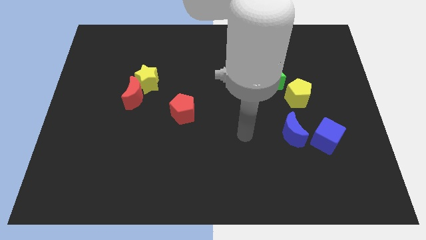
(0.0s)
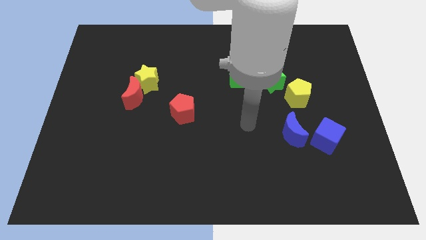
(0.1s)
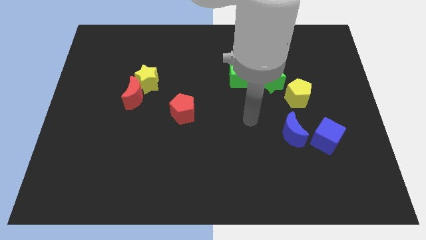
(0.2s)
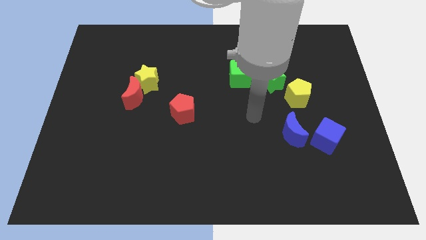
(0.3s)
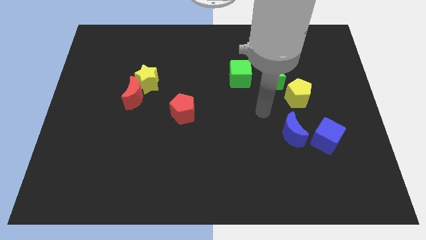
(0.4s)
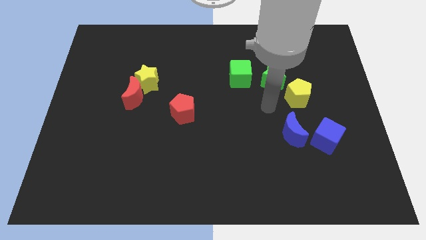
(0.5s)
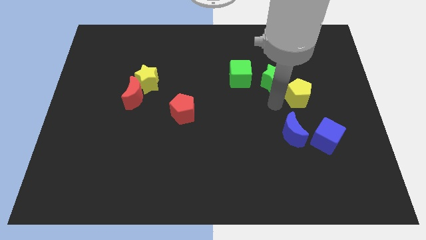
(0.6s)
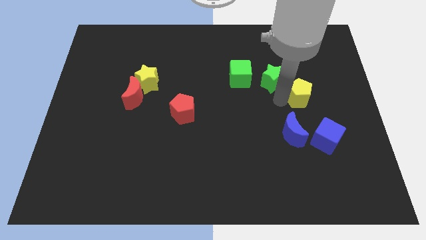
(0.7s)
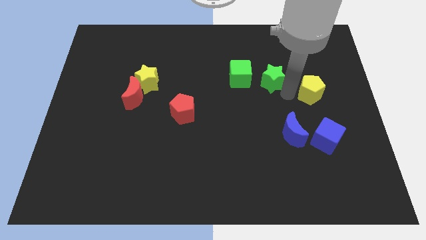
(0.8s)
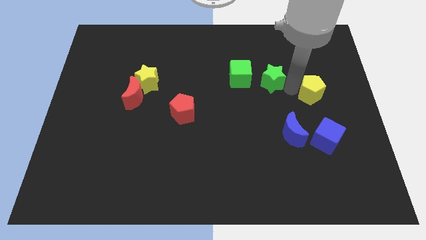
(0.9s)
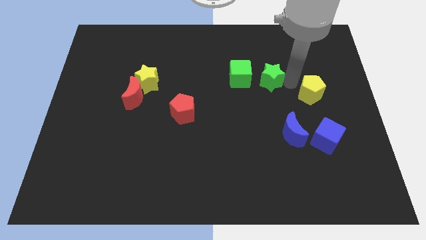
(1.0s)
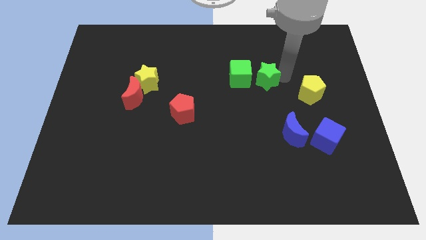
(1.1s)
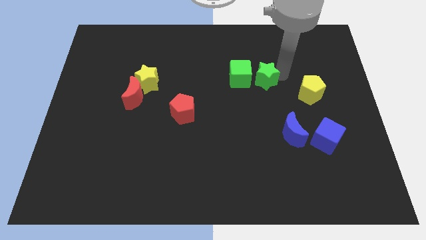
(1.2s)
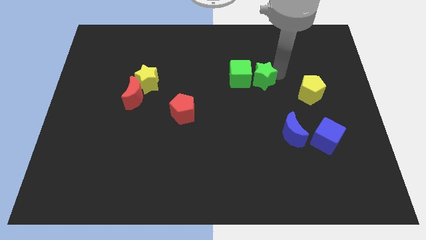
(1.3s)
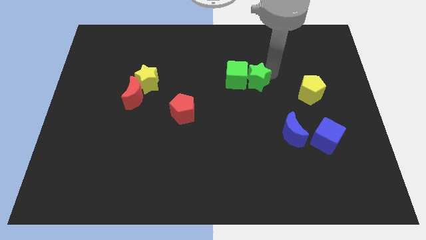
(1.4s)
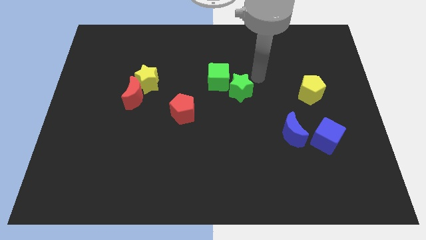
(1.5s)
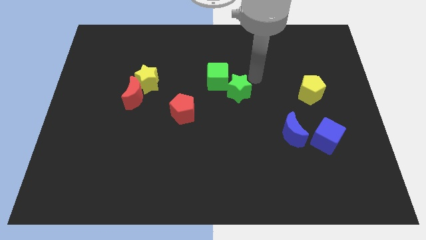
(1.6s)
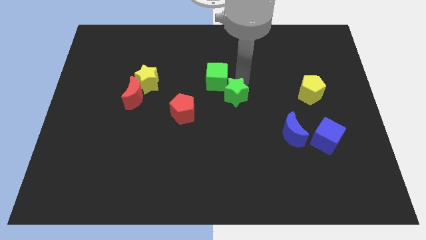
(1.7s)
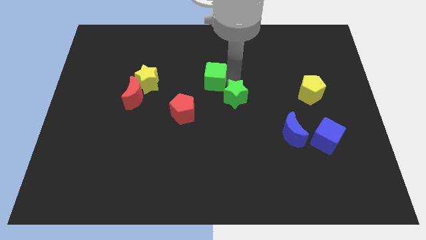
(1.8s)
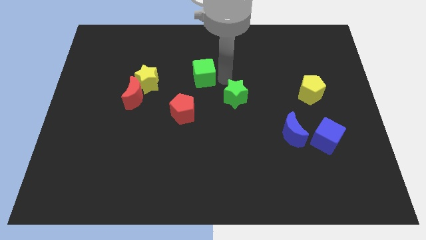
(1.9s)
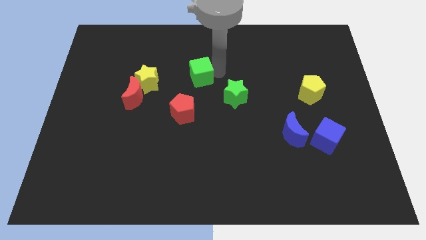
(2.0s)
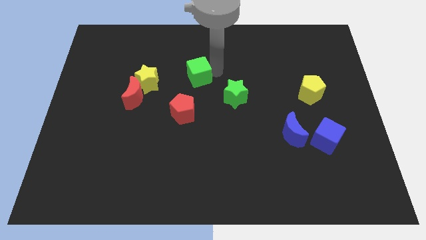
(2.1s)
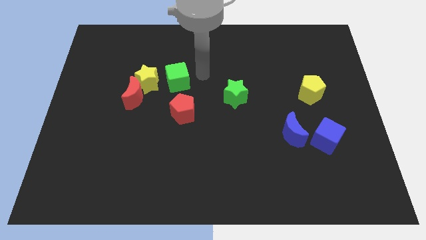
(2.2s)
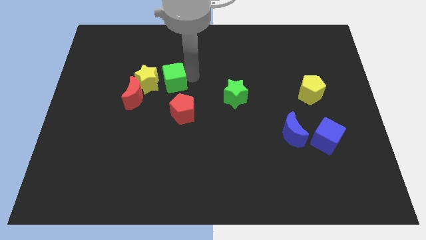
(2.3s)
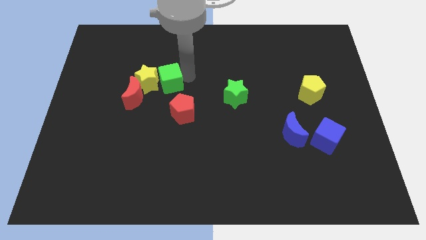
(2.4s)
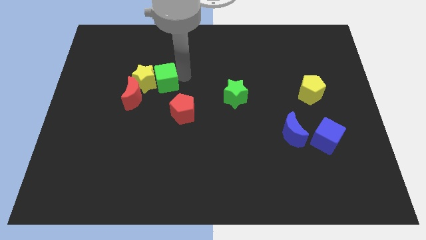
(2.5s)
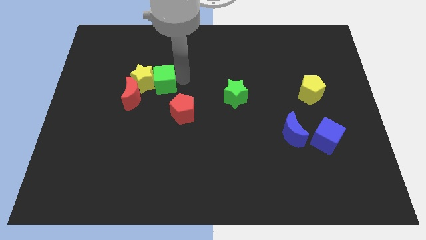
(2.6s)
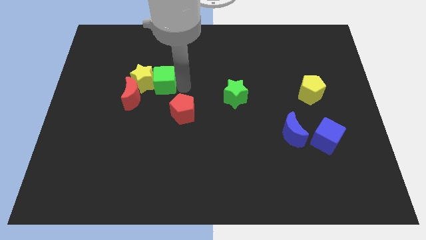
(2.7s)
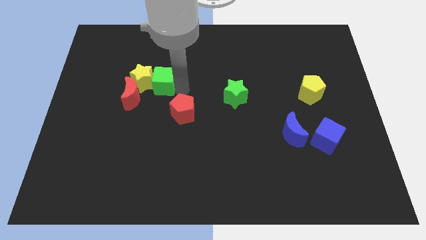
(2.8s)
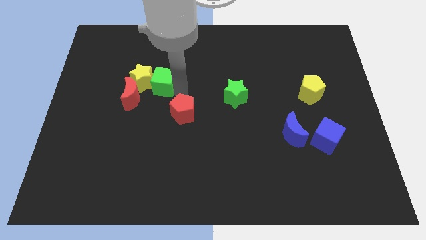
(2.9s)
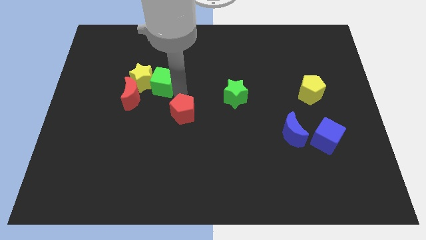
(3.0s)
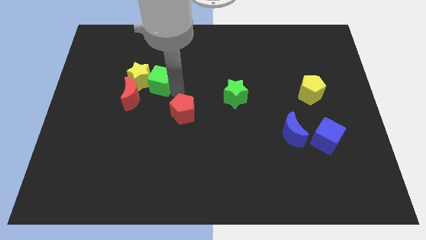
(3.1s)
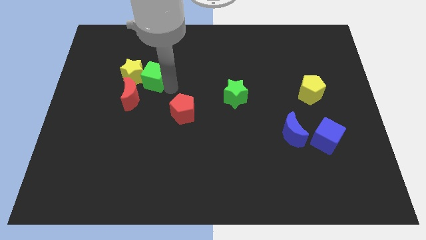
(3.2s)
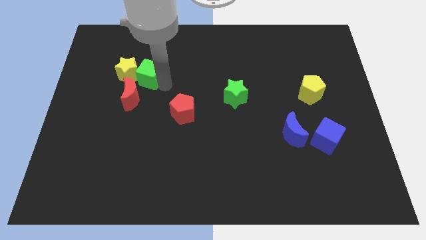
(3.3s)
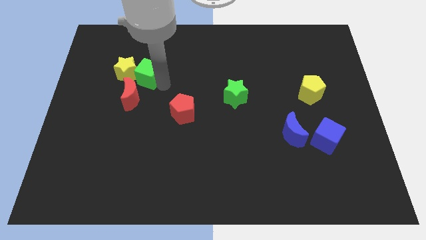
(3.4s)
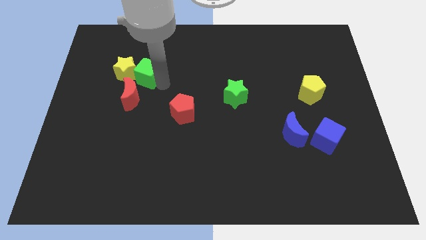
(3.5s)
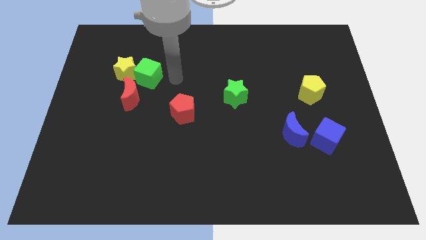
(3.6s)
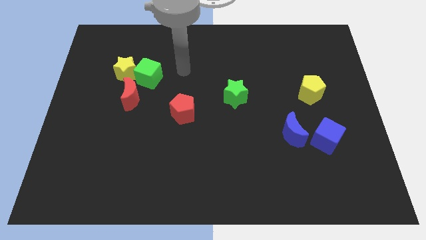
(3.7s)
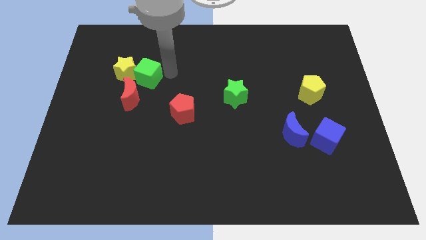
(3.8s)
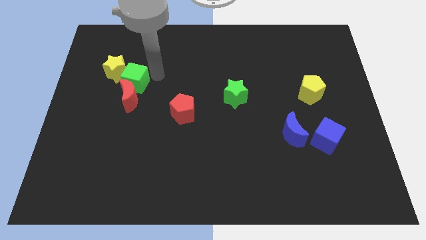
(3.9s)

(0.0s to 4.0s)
push the yellow pentagon away from the green star

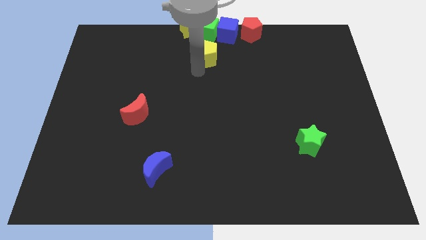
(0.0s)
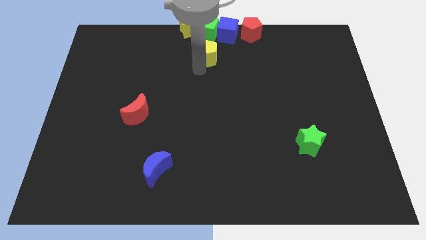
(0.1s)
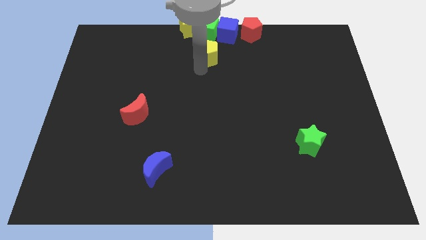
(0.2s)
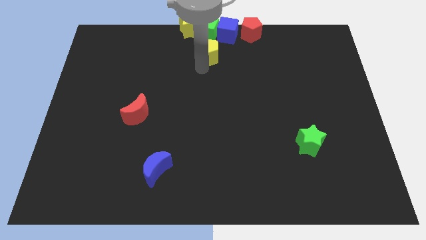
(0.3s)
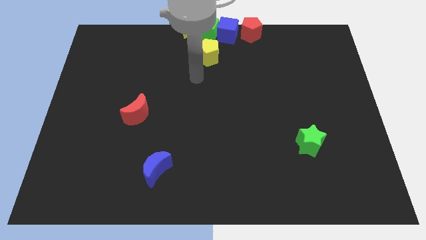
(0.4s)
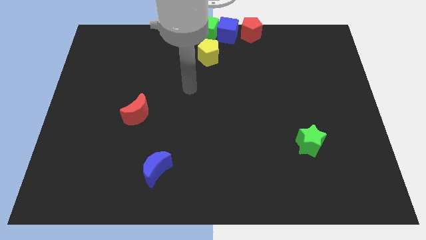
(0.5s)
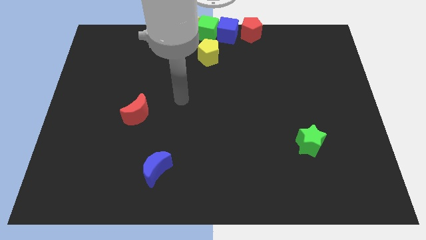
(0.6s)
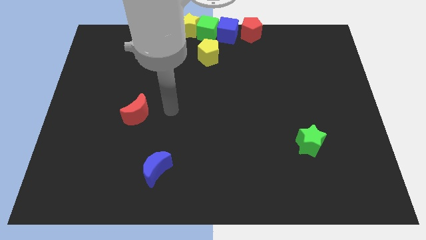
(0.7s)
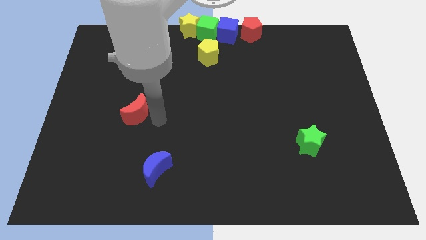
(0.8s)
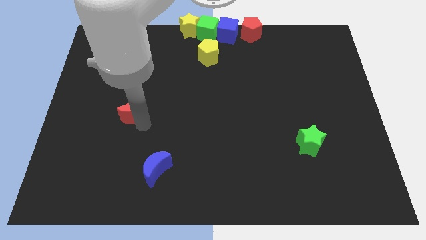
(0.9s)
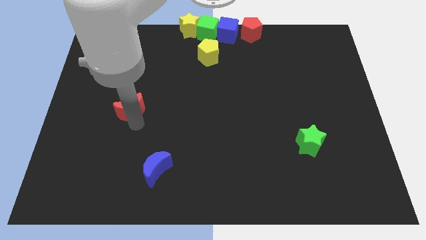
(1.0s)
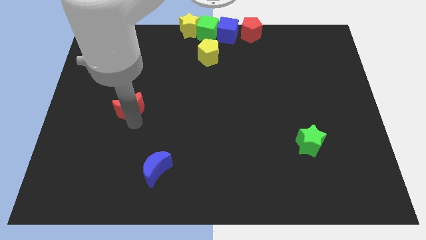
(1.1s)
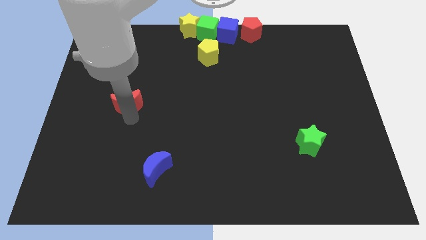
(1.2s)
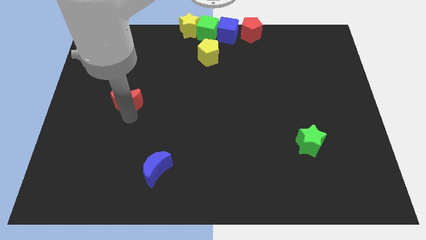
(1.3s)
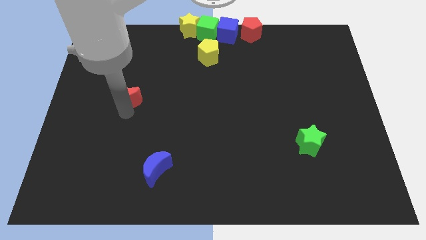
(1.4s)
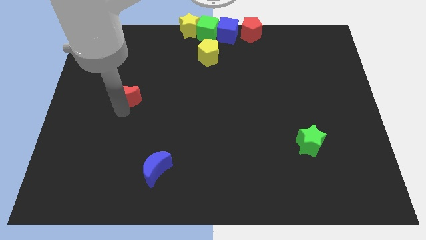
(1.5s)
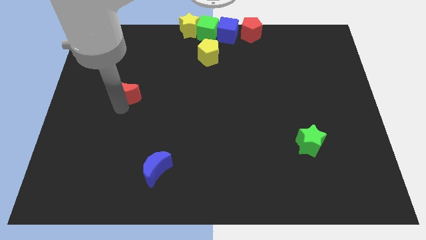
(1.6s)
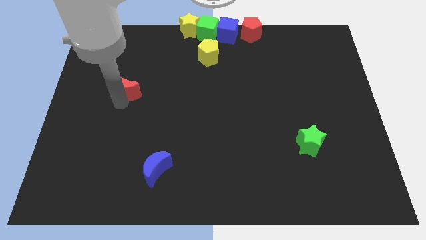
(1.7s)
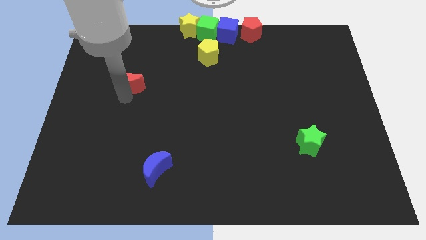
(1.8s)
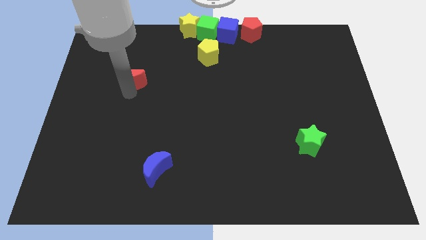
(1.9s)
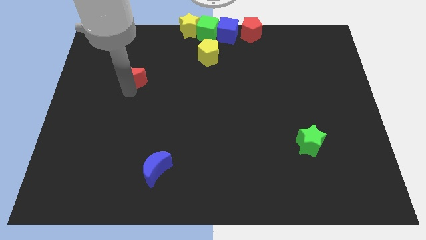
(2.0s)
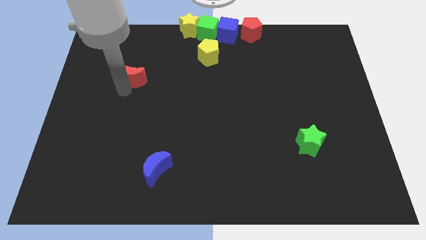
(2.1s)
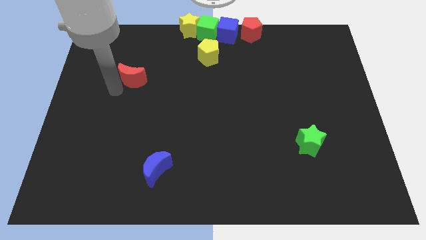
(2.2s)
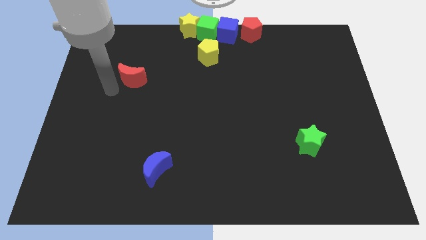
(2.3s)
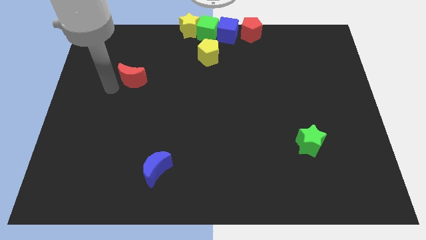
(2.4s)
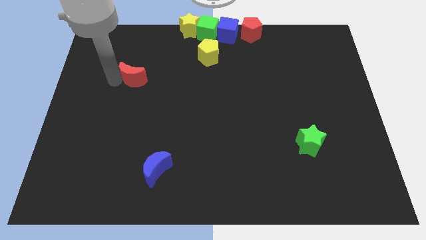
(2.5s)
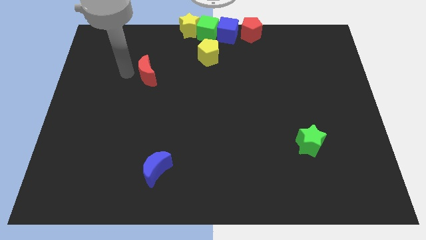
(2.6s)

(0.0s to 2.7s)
move red crescent towards yellow pentagon

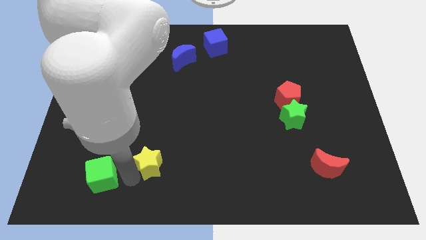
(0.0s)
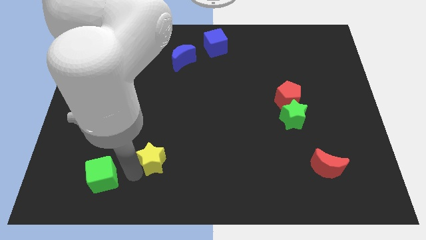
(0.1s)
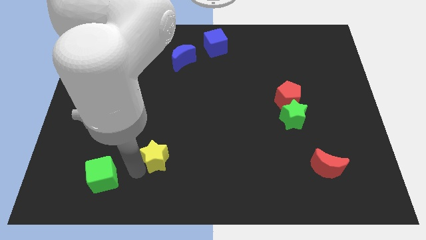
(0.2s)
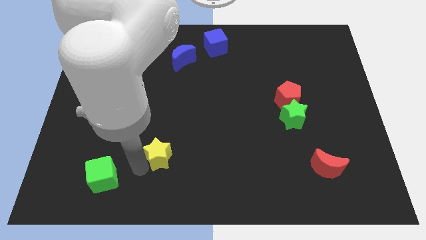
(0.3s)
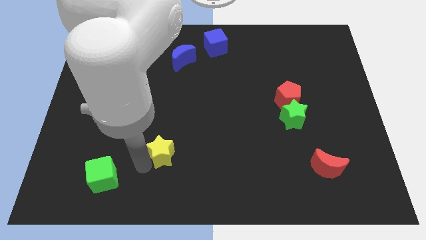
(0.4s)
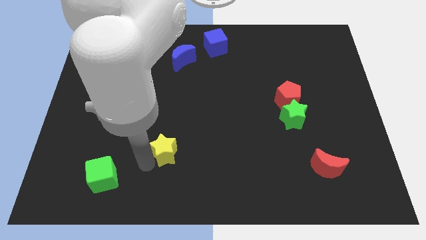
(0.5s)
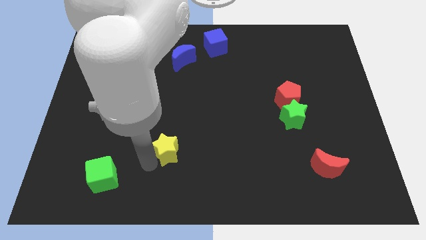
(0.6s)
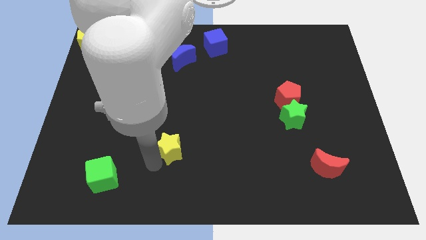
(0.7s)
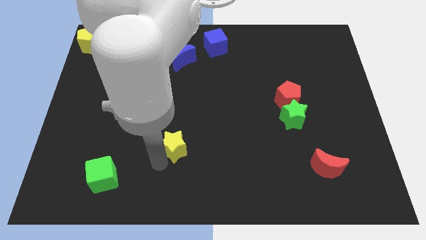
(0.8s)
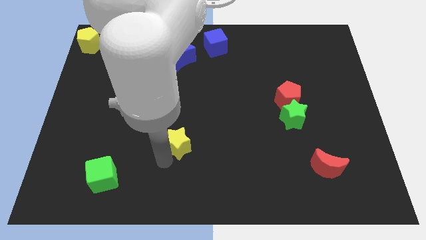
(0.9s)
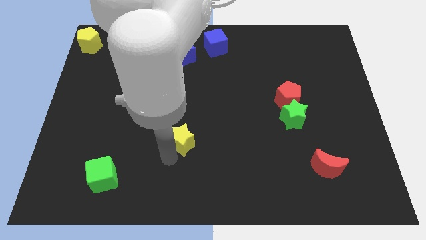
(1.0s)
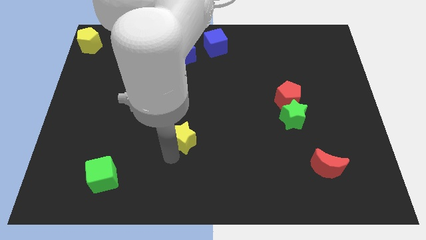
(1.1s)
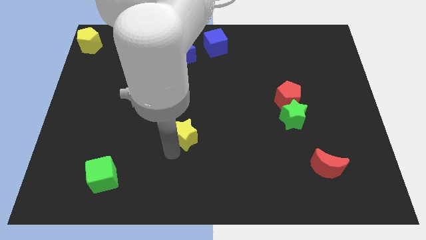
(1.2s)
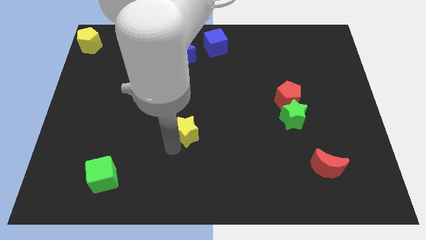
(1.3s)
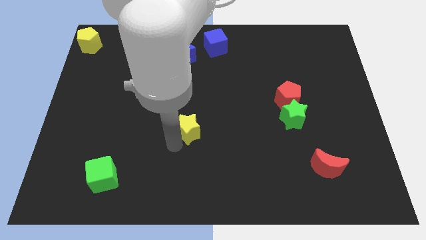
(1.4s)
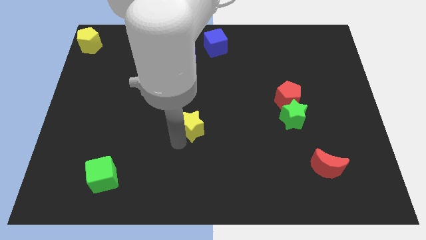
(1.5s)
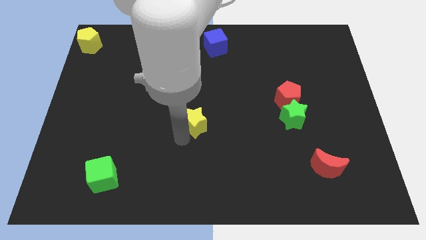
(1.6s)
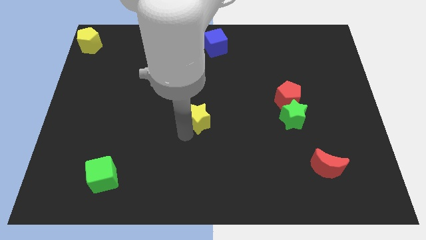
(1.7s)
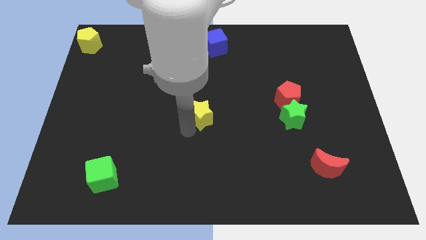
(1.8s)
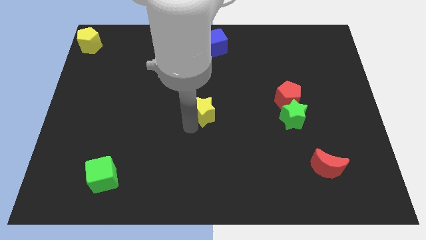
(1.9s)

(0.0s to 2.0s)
push yellow star to the center

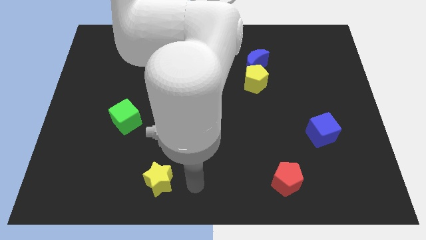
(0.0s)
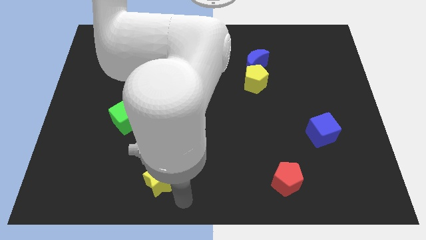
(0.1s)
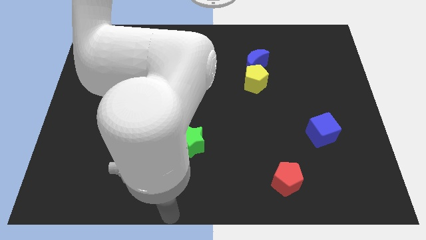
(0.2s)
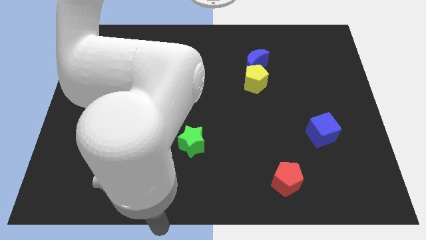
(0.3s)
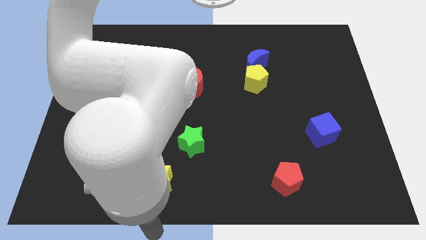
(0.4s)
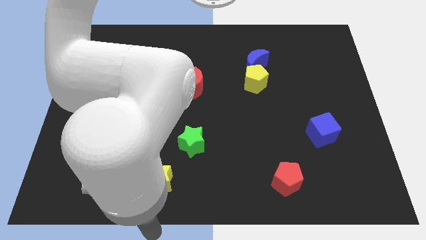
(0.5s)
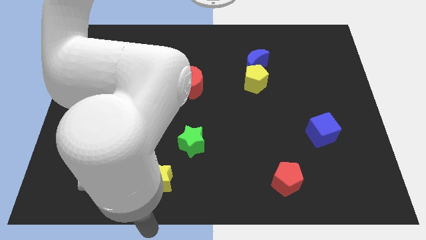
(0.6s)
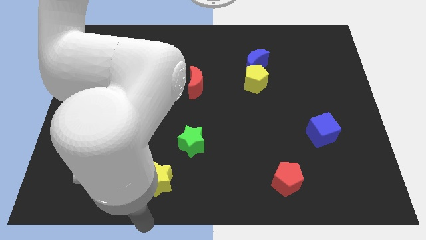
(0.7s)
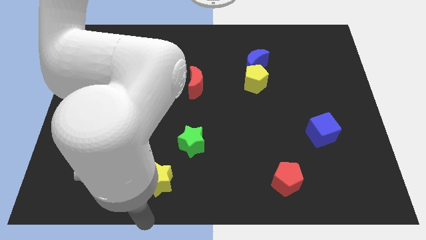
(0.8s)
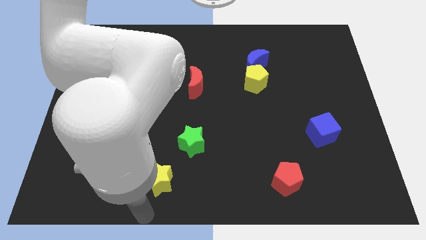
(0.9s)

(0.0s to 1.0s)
put your arm at the bottom of yellow star
